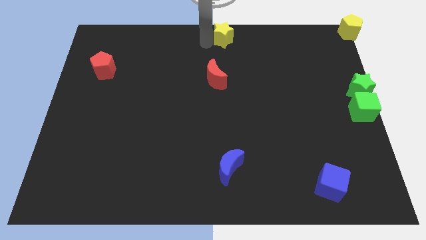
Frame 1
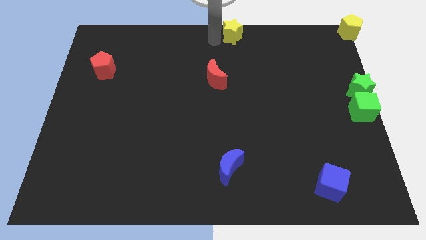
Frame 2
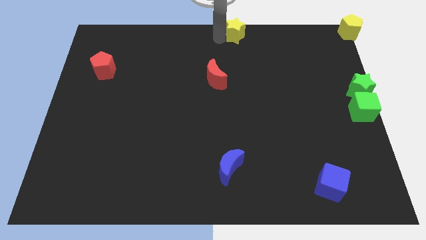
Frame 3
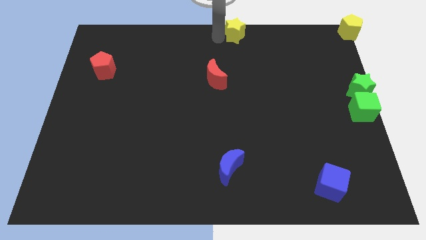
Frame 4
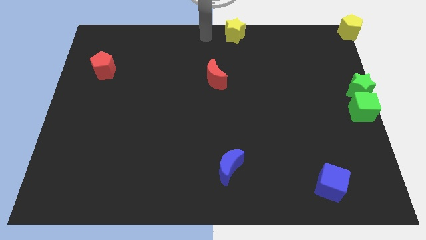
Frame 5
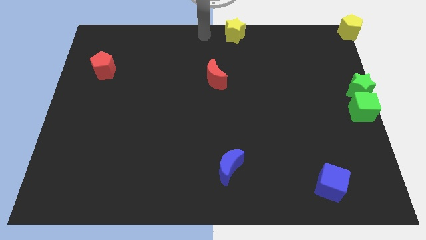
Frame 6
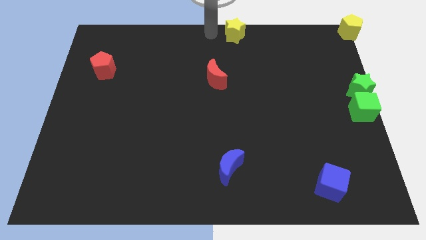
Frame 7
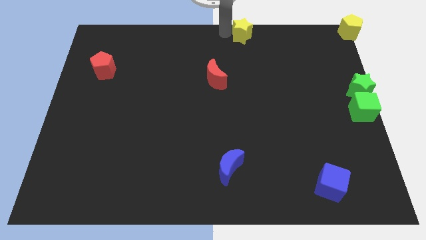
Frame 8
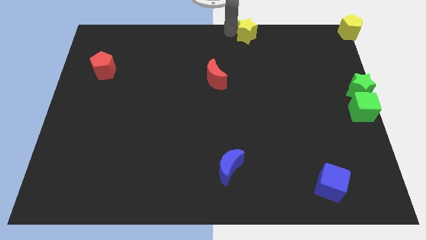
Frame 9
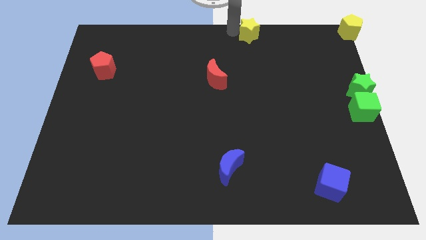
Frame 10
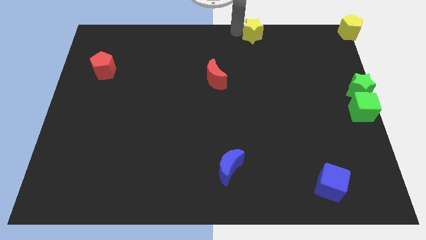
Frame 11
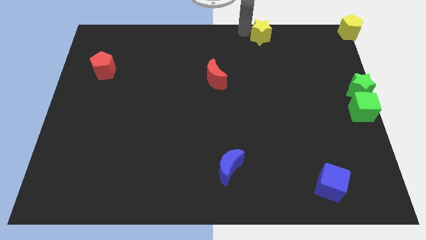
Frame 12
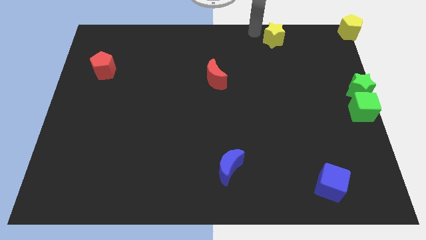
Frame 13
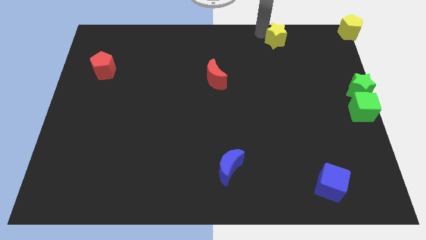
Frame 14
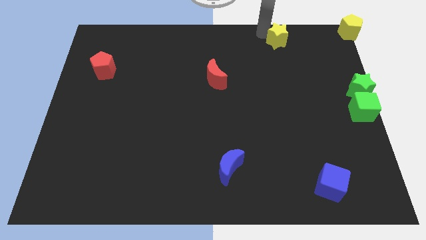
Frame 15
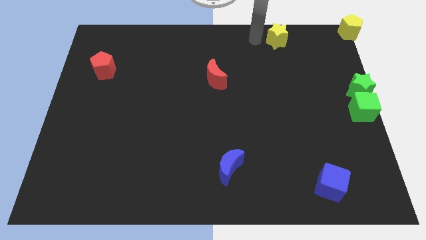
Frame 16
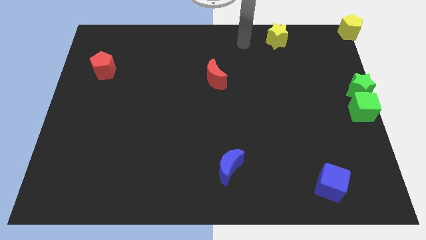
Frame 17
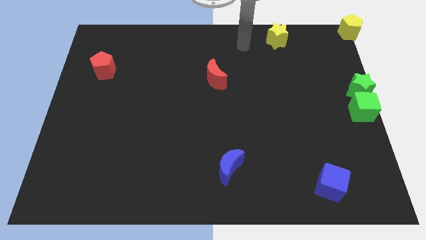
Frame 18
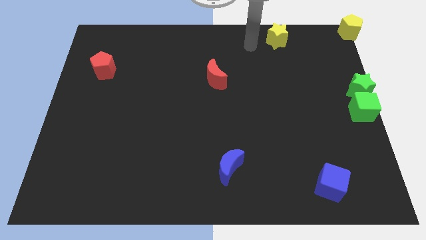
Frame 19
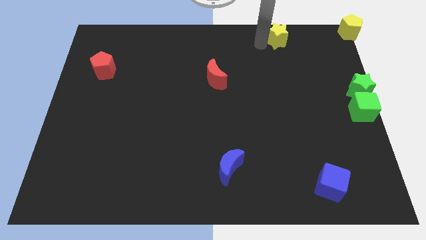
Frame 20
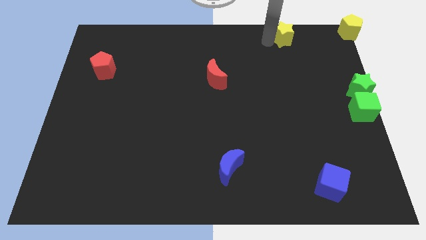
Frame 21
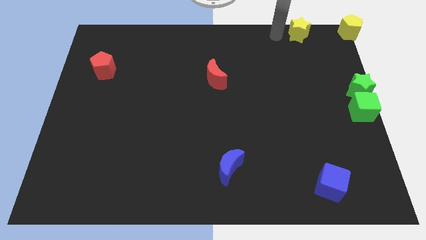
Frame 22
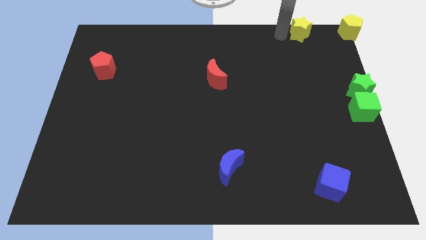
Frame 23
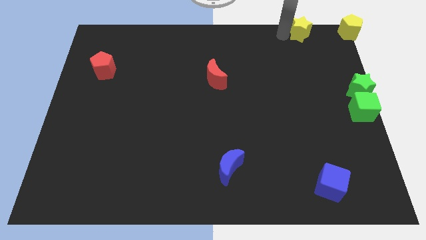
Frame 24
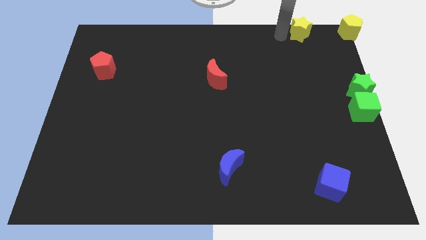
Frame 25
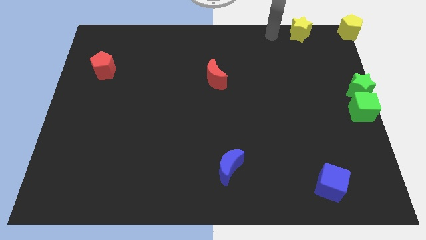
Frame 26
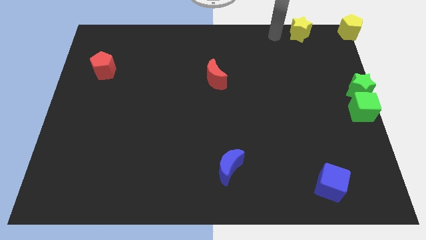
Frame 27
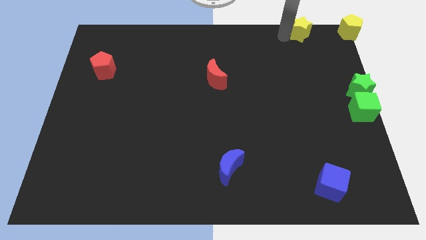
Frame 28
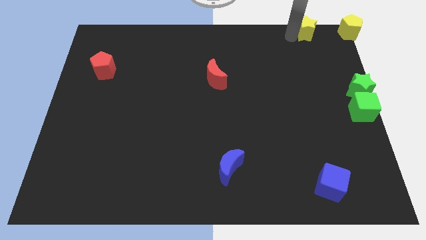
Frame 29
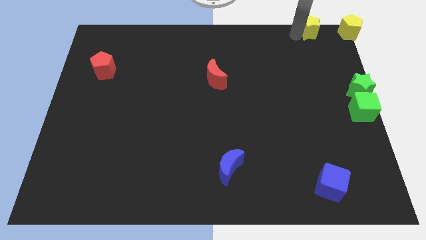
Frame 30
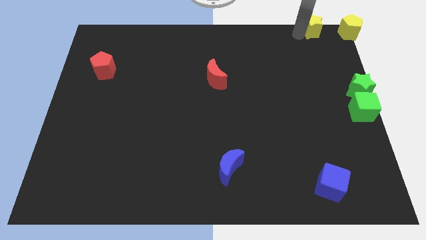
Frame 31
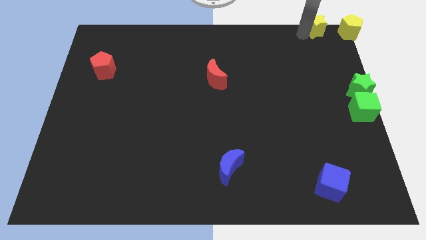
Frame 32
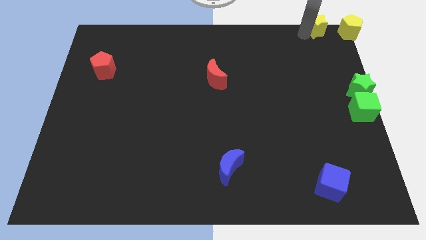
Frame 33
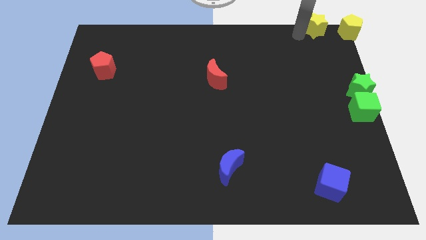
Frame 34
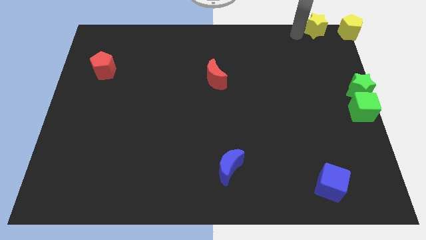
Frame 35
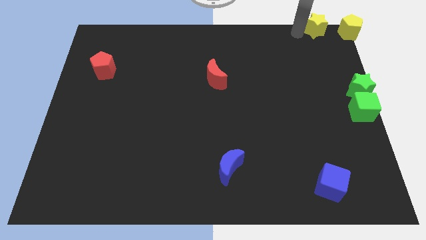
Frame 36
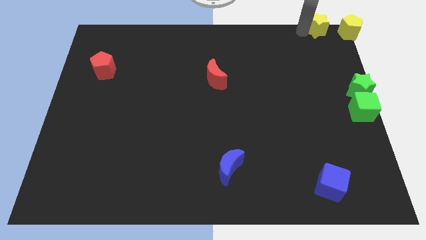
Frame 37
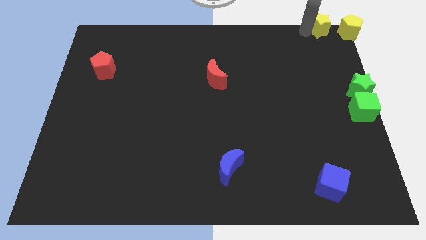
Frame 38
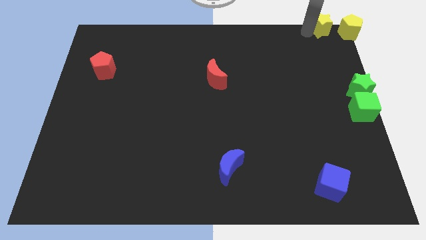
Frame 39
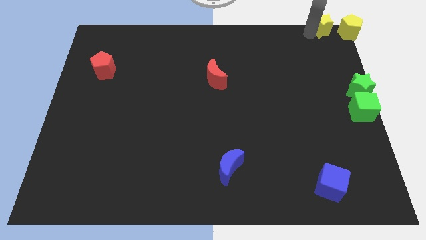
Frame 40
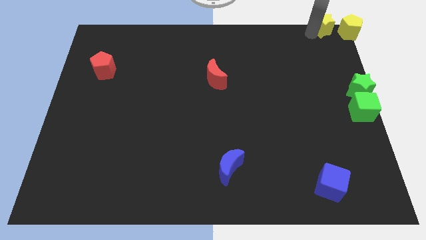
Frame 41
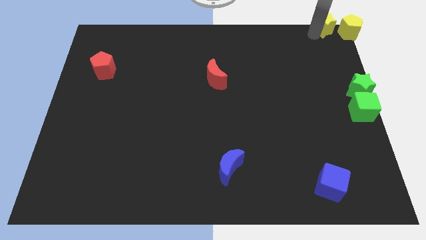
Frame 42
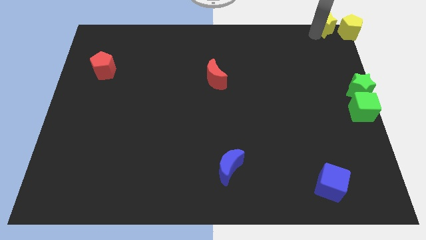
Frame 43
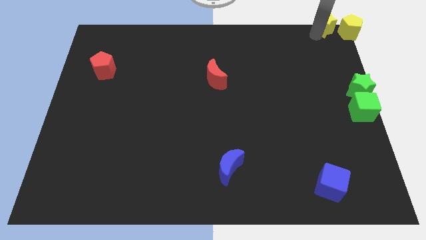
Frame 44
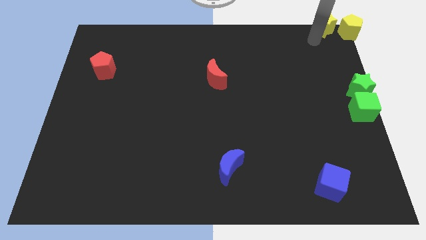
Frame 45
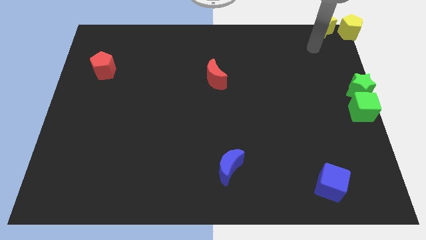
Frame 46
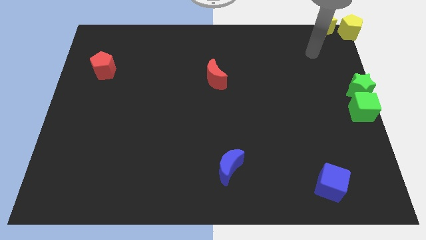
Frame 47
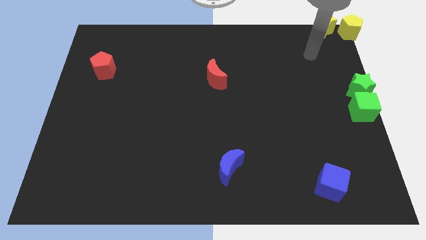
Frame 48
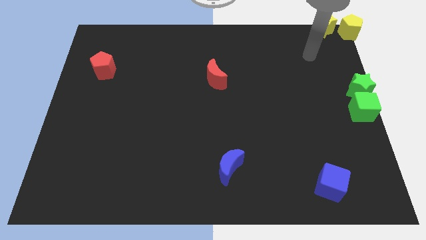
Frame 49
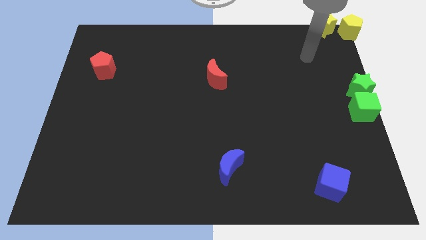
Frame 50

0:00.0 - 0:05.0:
move the yellow star to the left side of the yellow pentagon

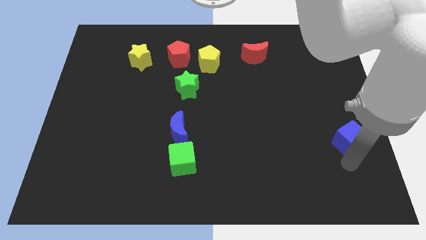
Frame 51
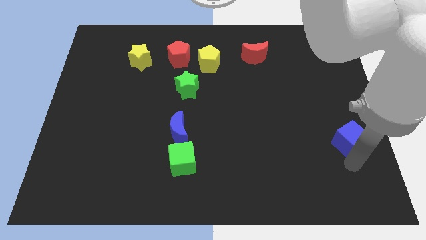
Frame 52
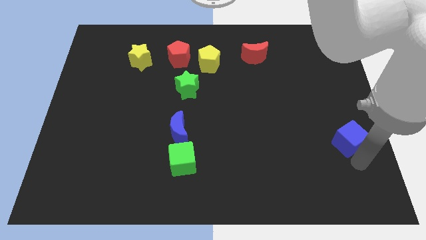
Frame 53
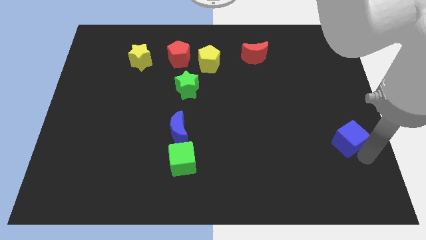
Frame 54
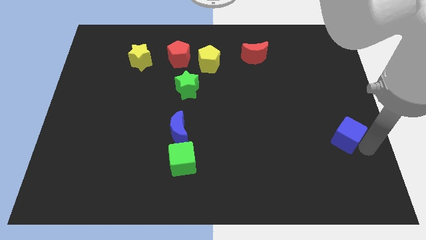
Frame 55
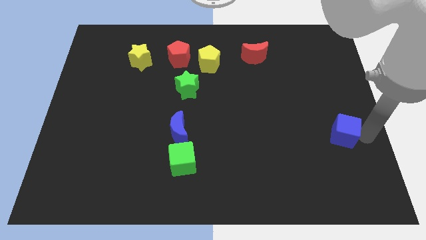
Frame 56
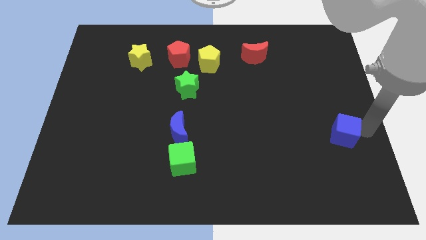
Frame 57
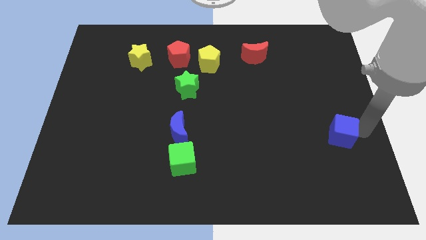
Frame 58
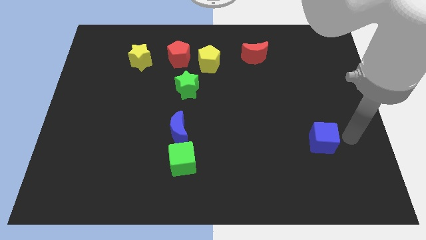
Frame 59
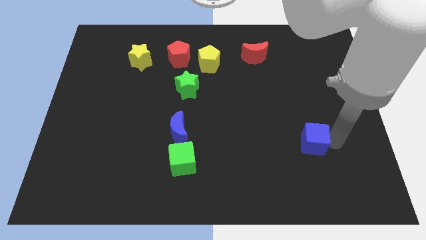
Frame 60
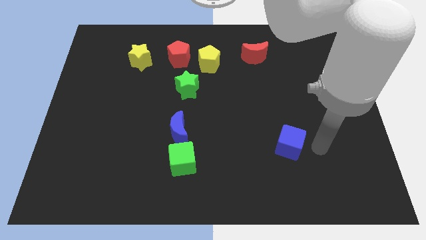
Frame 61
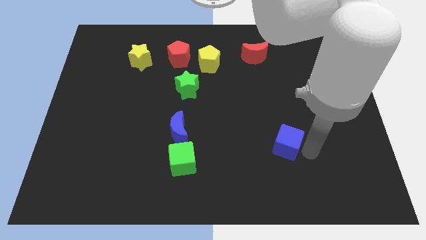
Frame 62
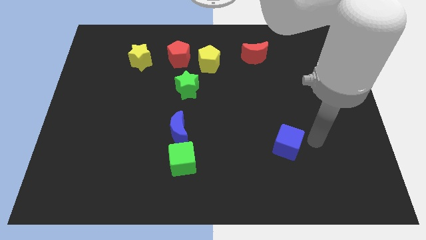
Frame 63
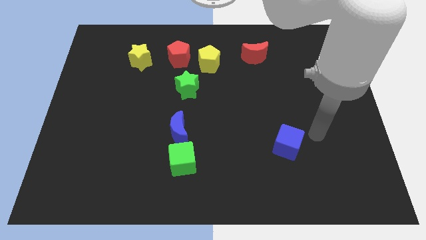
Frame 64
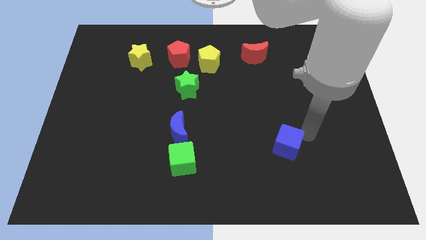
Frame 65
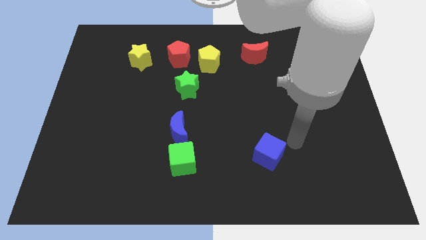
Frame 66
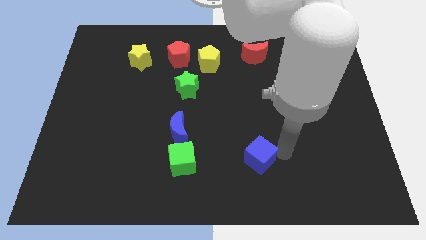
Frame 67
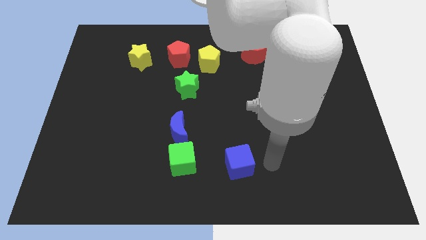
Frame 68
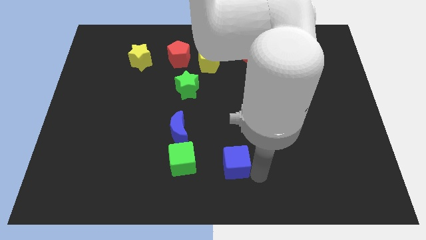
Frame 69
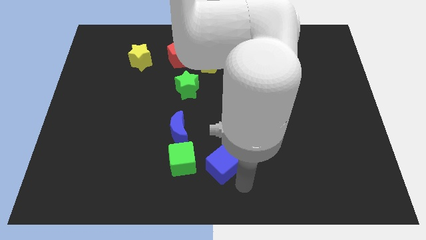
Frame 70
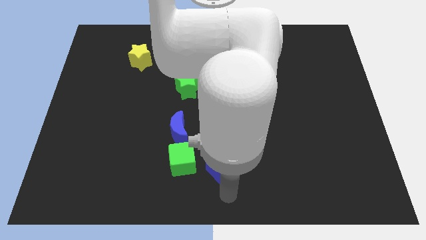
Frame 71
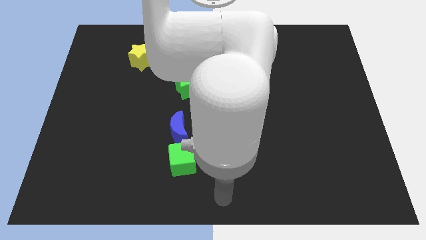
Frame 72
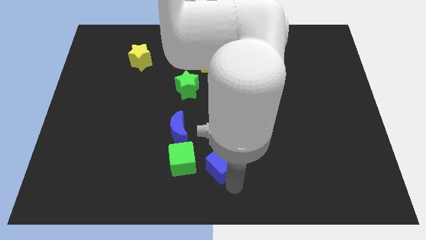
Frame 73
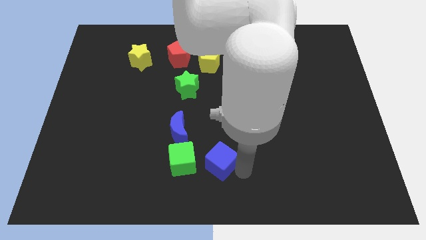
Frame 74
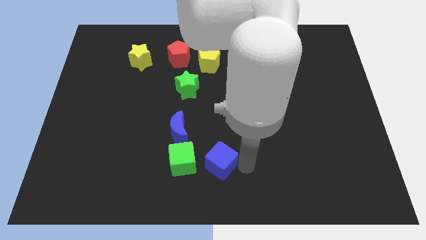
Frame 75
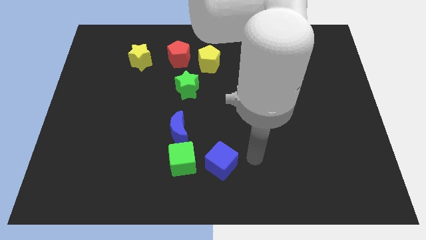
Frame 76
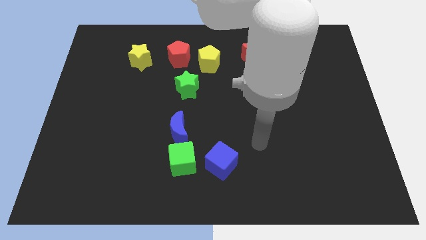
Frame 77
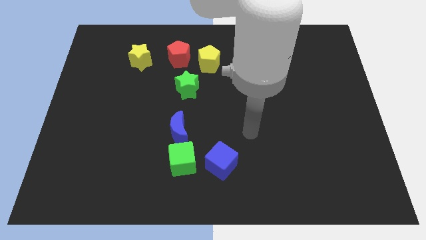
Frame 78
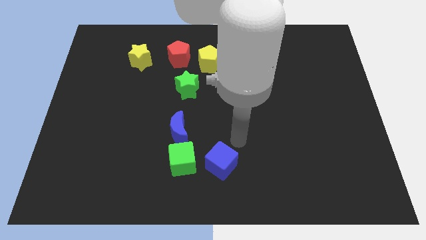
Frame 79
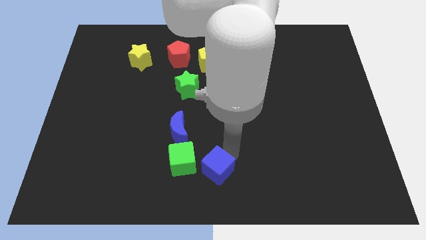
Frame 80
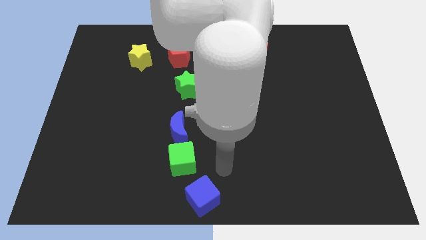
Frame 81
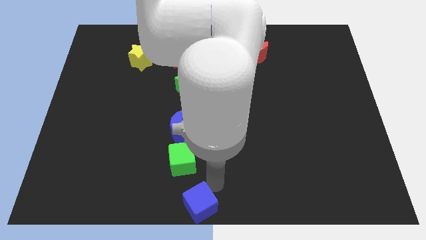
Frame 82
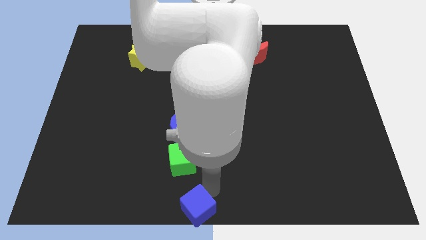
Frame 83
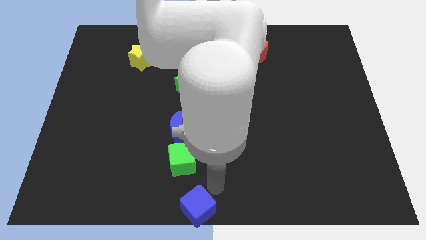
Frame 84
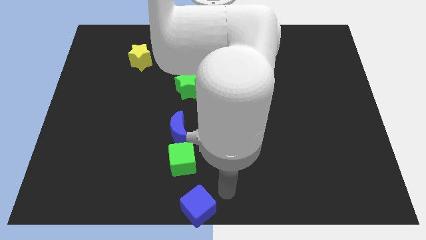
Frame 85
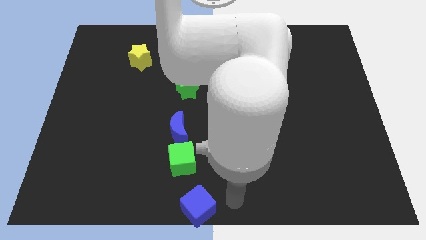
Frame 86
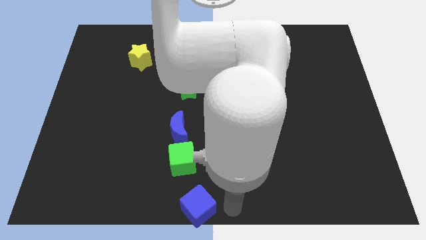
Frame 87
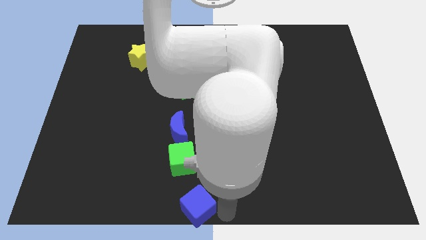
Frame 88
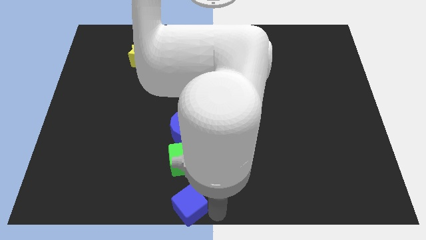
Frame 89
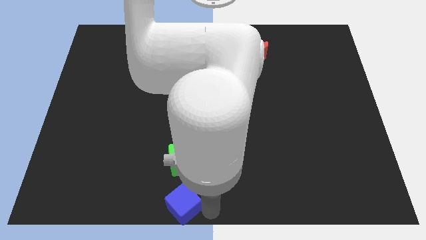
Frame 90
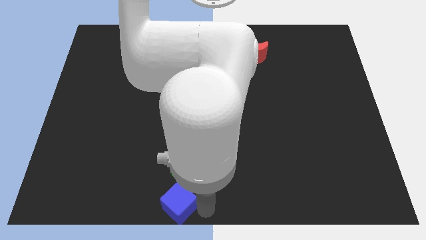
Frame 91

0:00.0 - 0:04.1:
place the blue cube below the green cube
